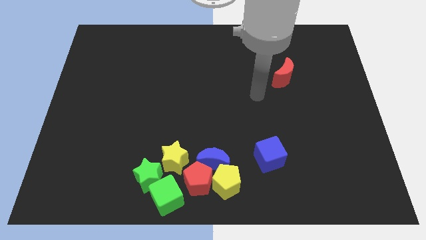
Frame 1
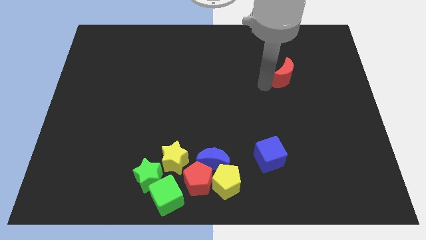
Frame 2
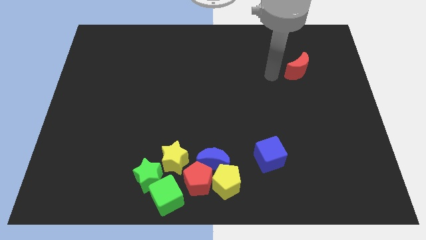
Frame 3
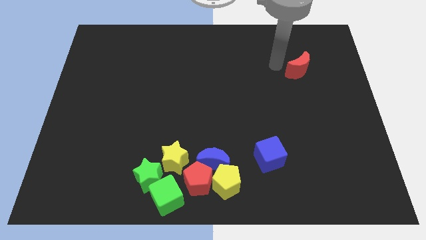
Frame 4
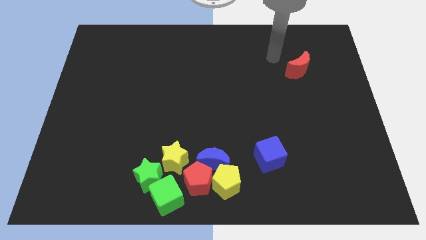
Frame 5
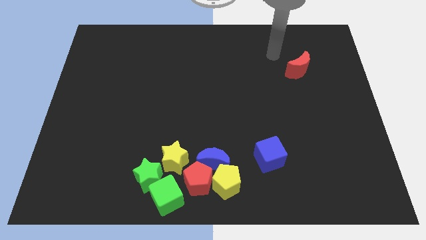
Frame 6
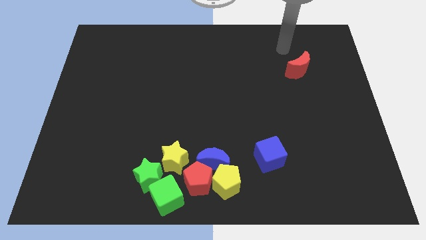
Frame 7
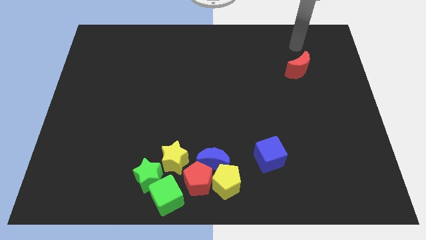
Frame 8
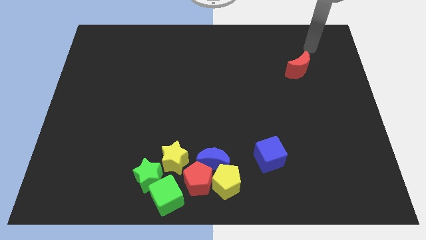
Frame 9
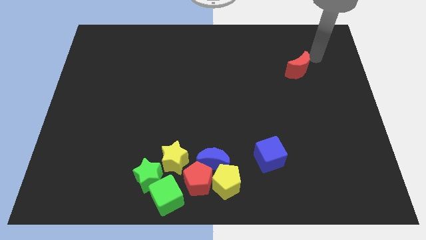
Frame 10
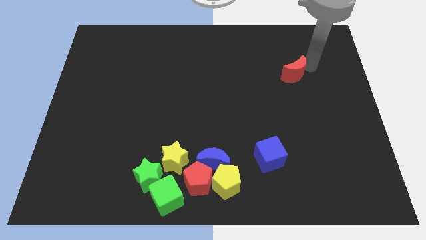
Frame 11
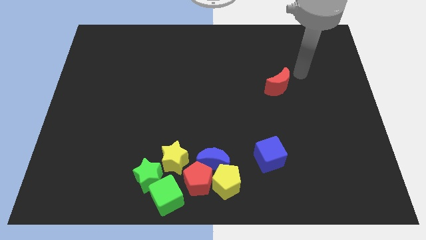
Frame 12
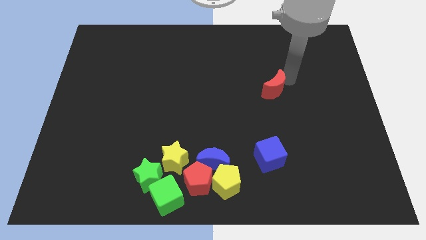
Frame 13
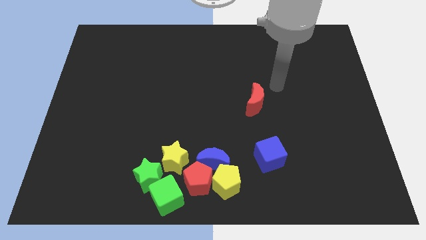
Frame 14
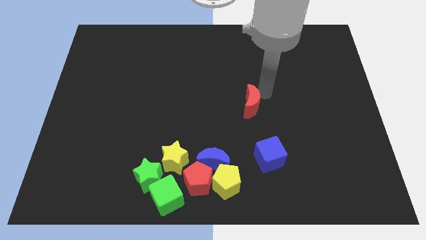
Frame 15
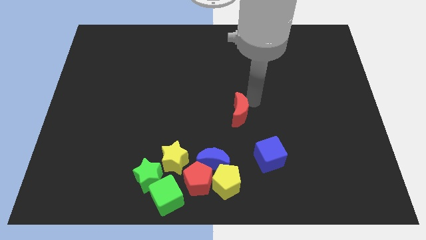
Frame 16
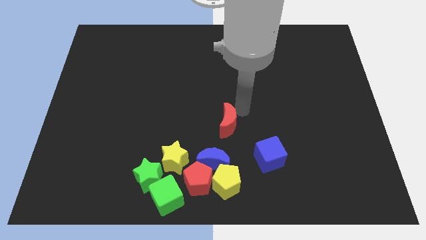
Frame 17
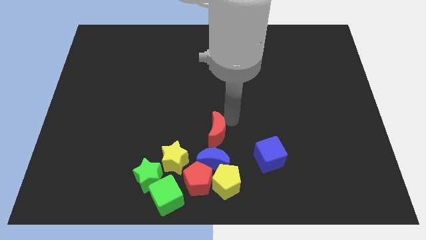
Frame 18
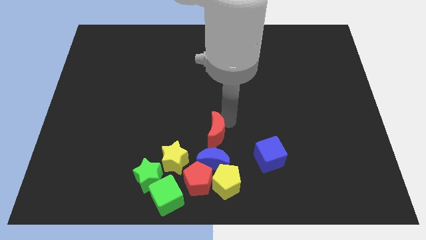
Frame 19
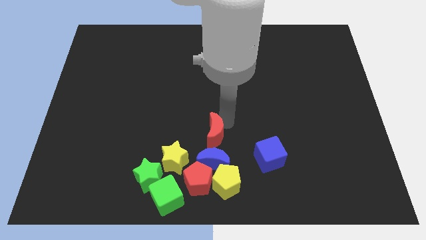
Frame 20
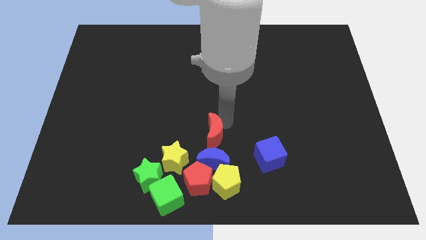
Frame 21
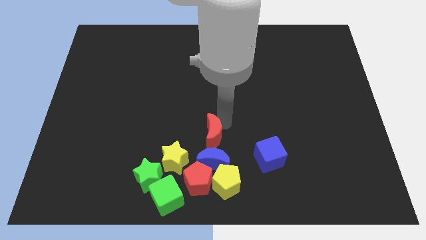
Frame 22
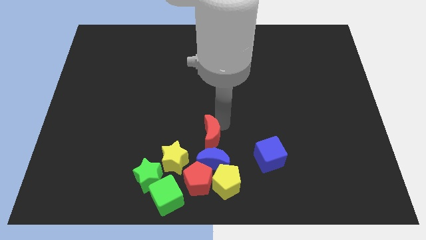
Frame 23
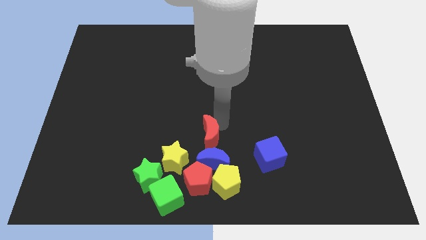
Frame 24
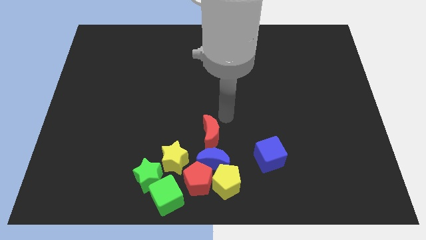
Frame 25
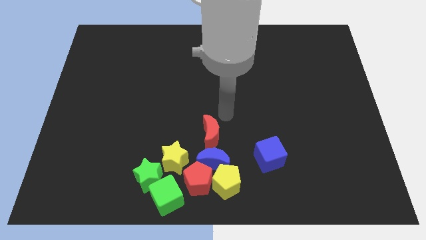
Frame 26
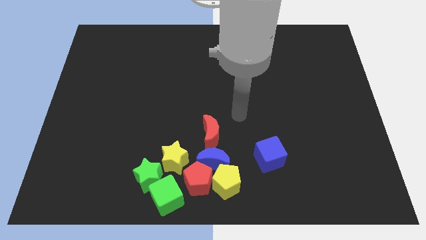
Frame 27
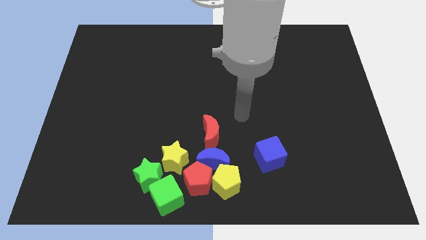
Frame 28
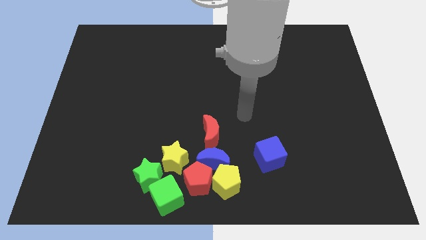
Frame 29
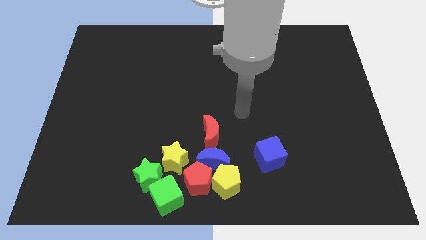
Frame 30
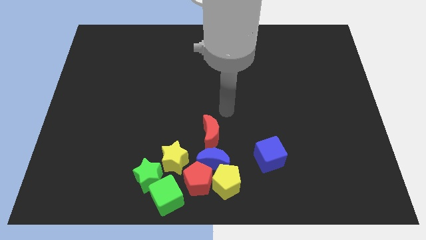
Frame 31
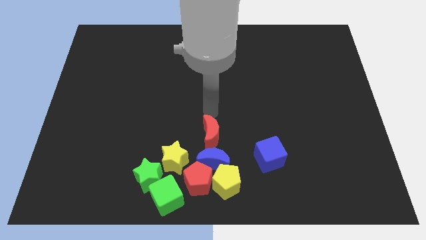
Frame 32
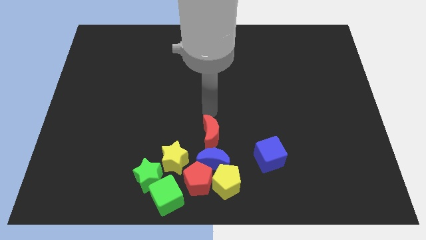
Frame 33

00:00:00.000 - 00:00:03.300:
put the red crescent to the top side of the blue crescent

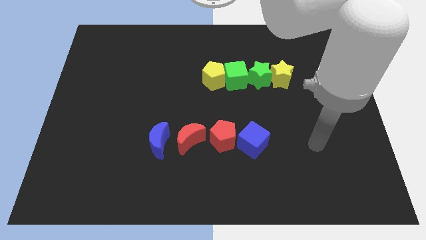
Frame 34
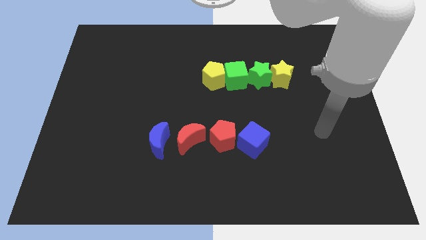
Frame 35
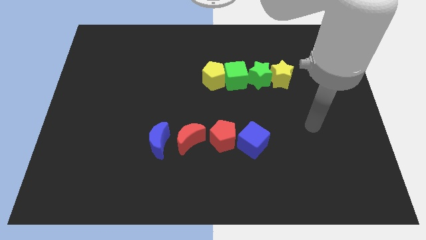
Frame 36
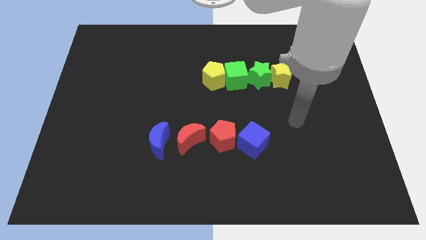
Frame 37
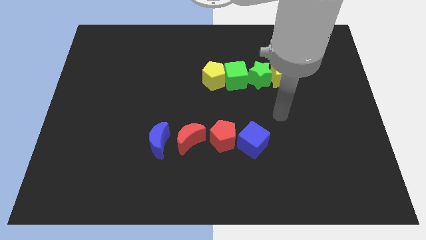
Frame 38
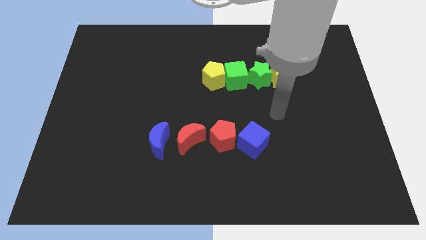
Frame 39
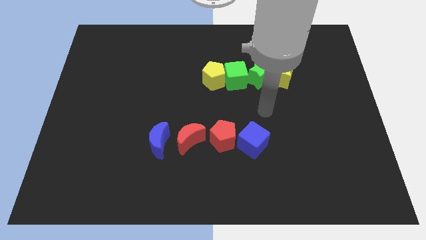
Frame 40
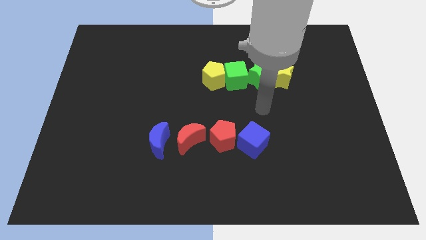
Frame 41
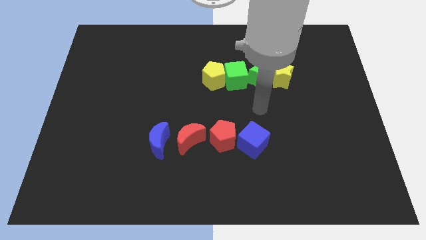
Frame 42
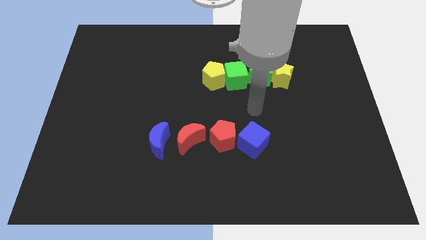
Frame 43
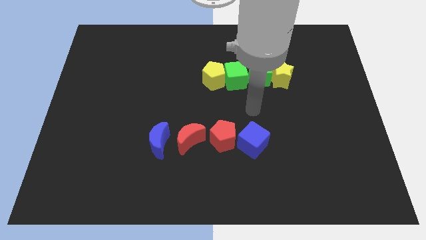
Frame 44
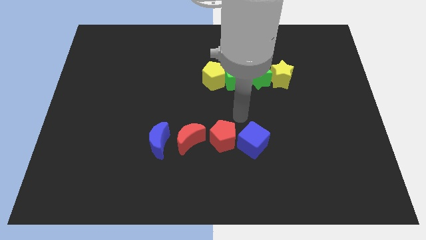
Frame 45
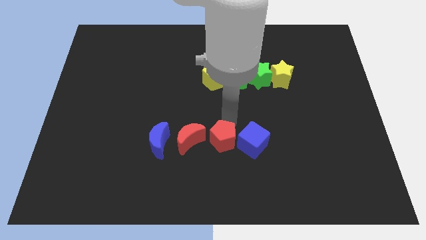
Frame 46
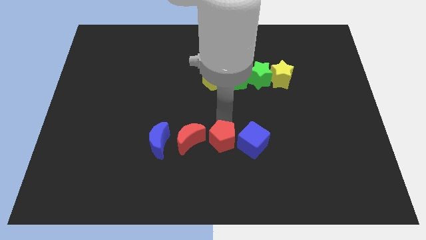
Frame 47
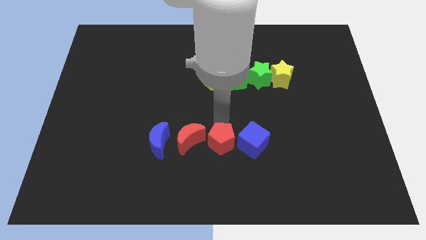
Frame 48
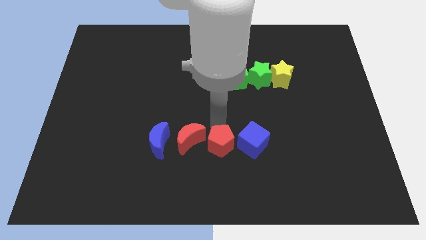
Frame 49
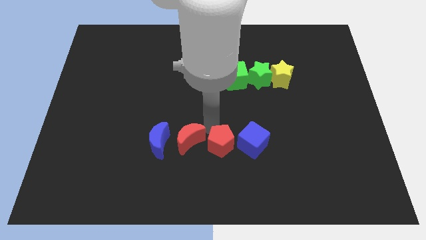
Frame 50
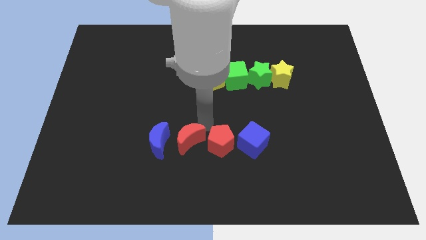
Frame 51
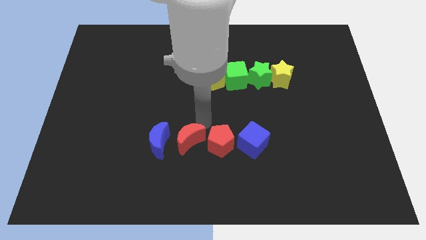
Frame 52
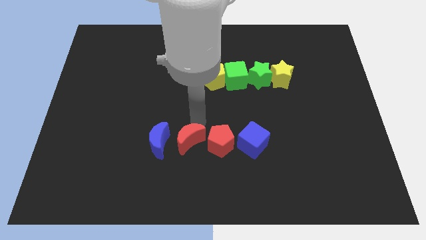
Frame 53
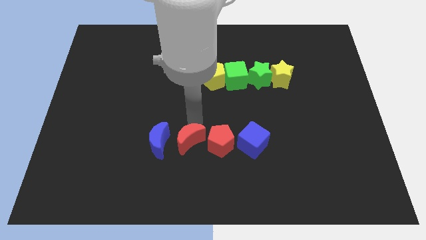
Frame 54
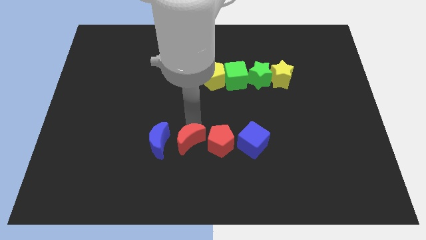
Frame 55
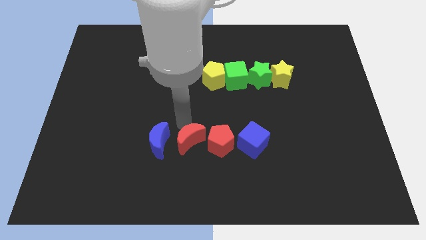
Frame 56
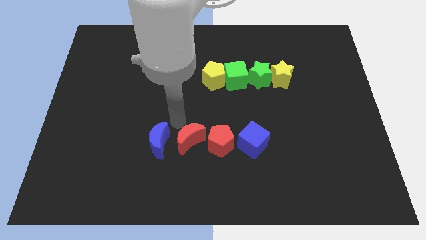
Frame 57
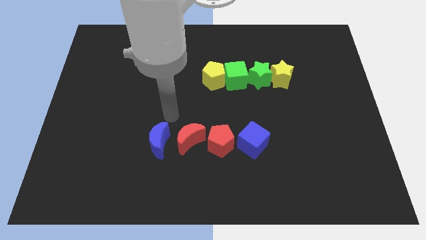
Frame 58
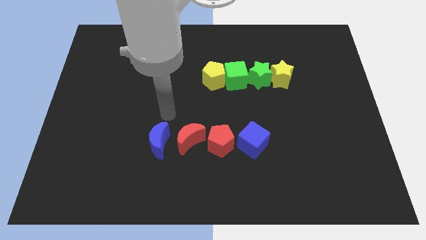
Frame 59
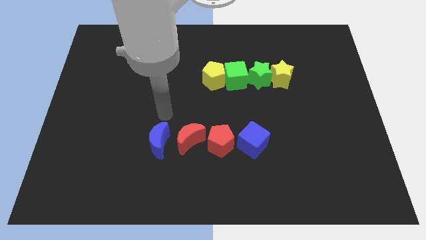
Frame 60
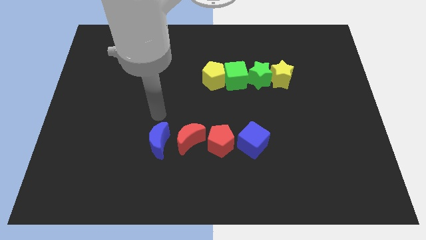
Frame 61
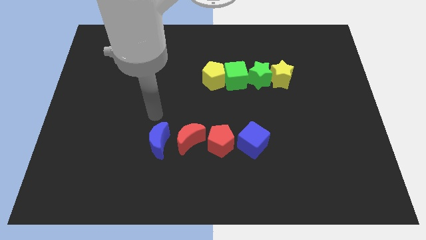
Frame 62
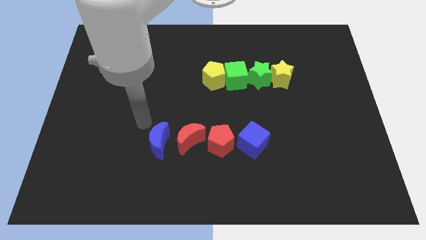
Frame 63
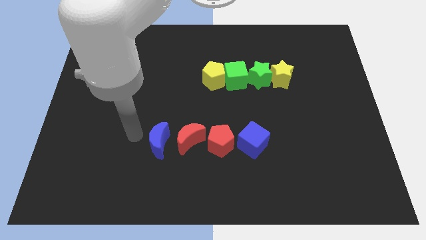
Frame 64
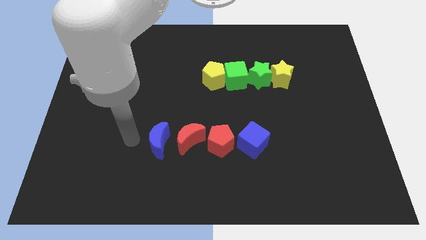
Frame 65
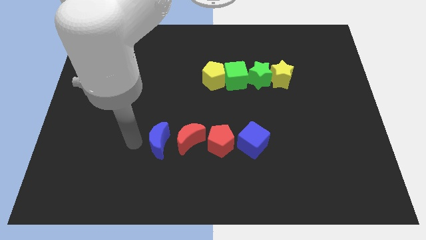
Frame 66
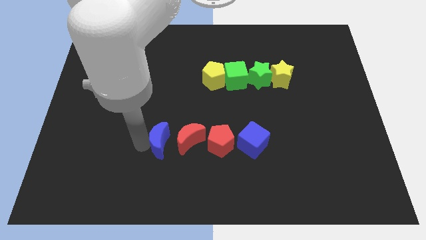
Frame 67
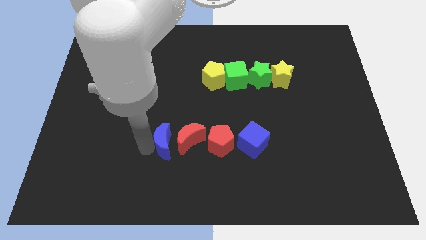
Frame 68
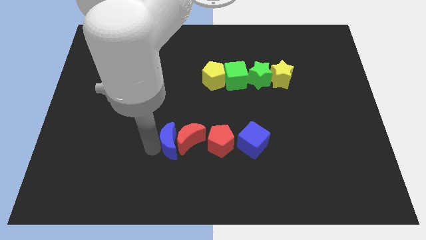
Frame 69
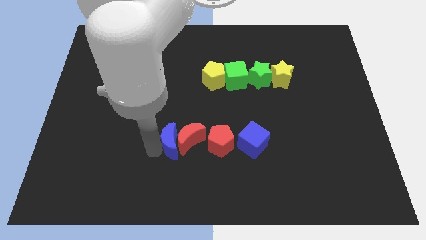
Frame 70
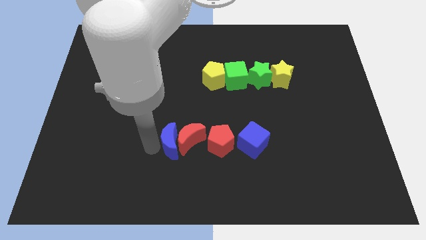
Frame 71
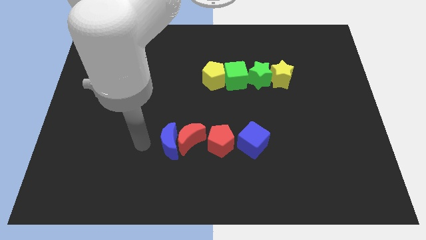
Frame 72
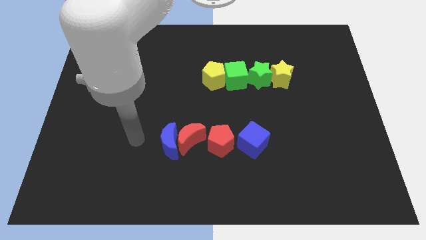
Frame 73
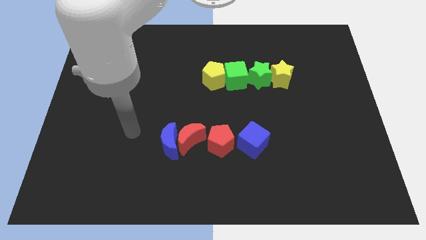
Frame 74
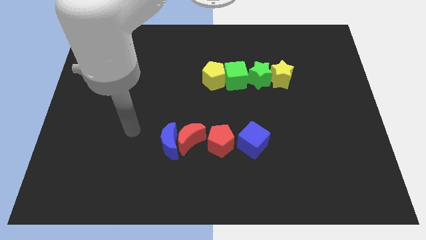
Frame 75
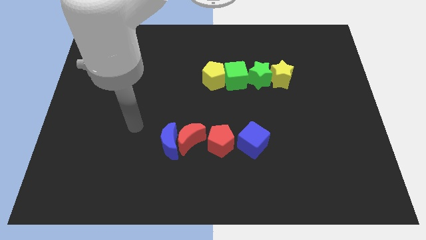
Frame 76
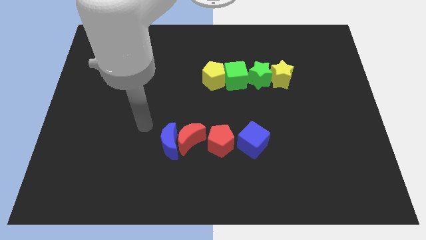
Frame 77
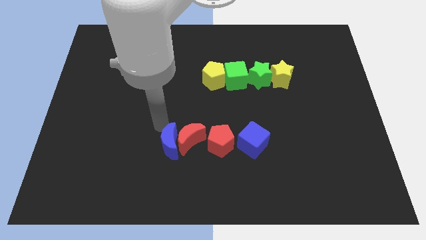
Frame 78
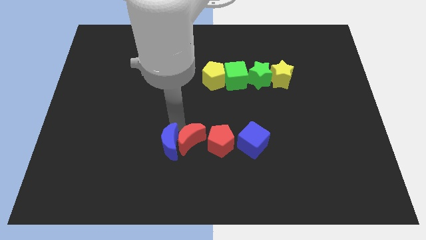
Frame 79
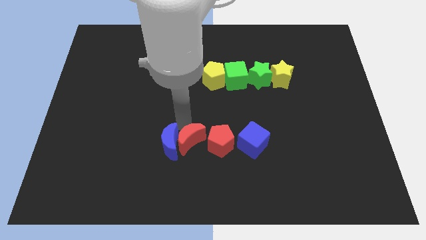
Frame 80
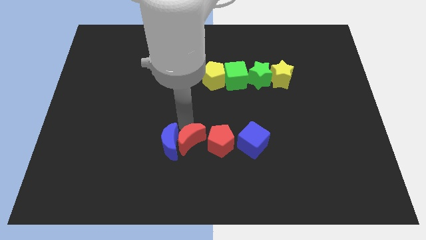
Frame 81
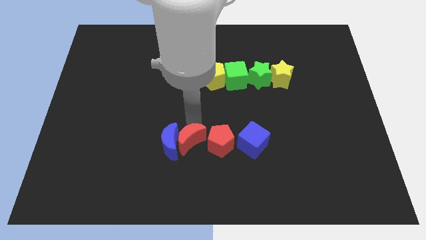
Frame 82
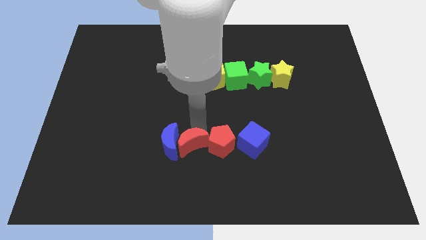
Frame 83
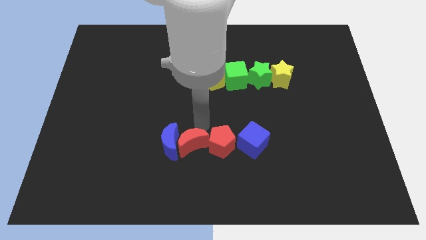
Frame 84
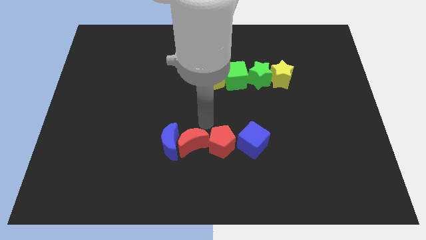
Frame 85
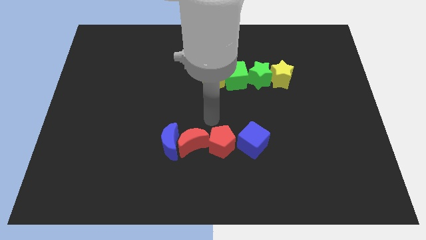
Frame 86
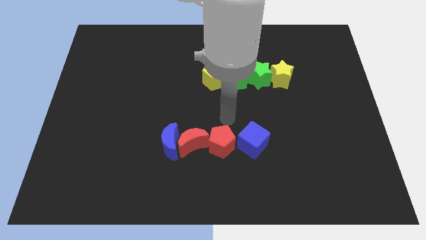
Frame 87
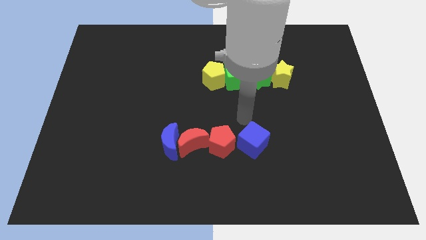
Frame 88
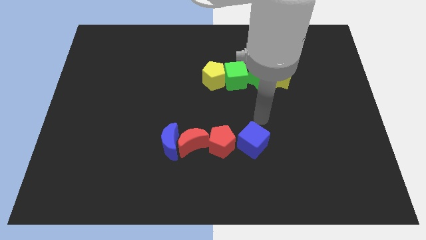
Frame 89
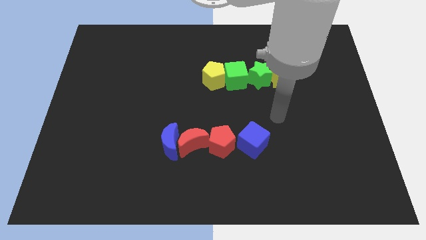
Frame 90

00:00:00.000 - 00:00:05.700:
adjust the blue crescent the red pentagon and the red crescent to form a horizontal line of blocks
